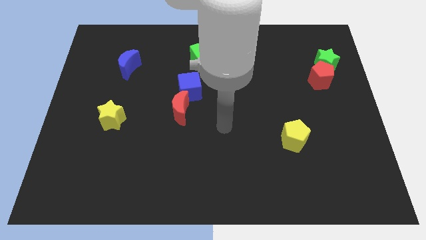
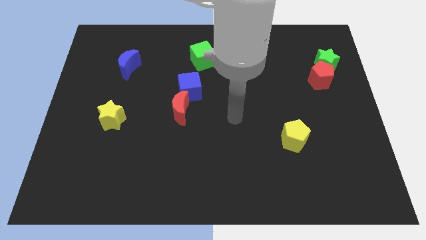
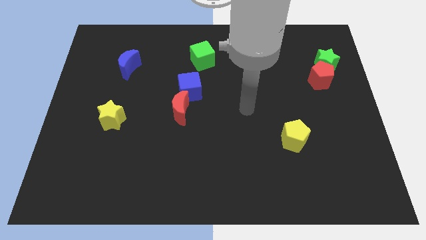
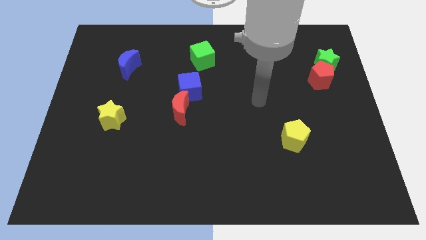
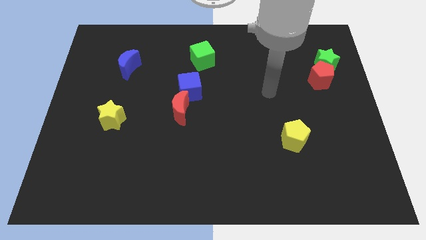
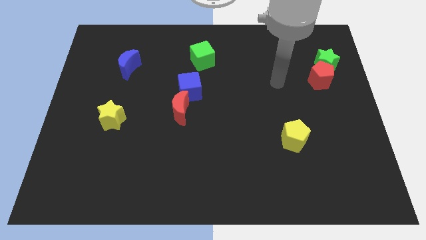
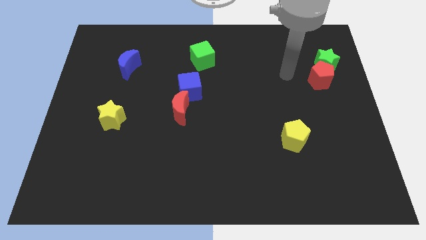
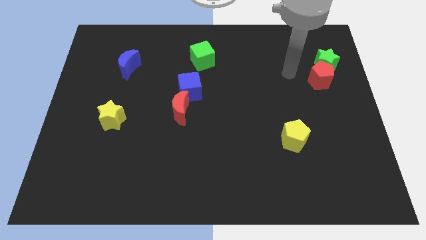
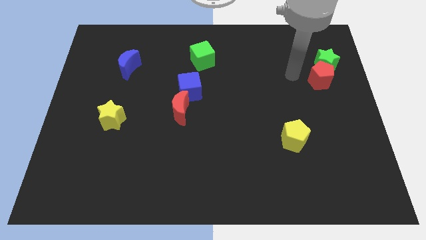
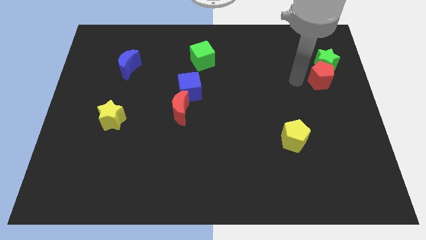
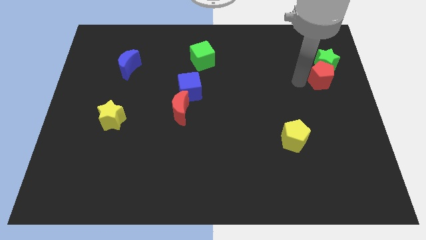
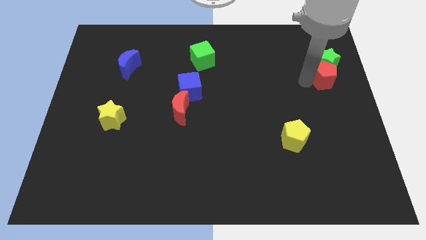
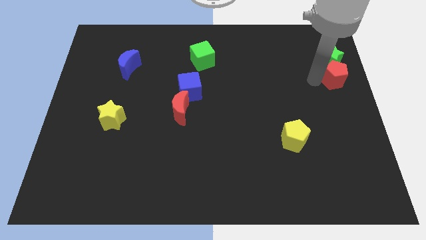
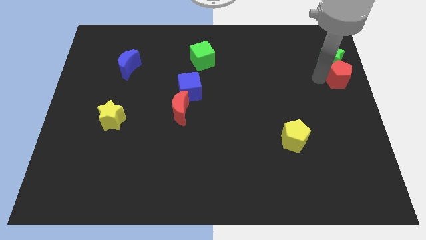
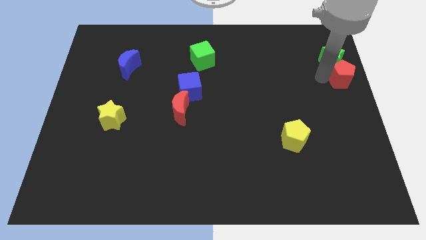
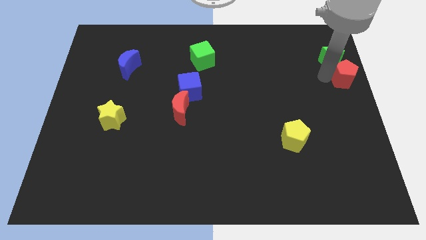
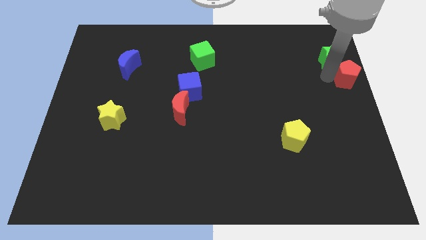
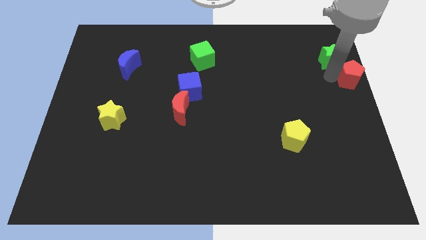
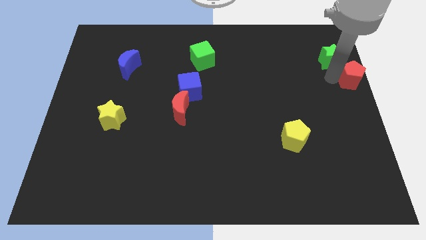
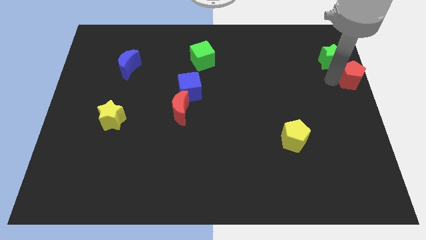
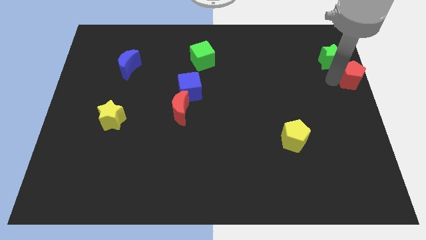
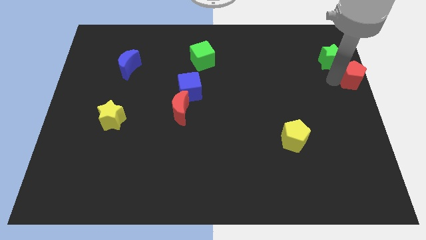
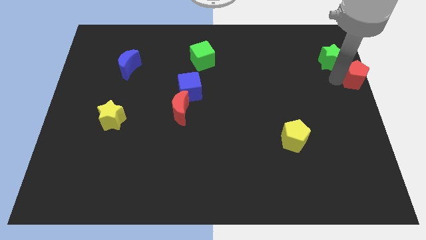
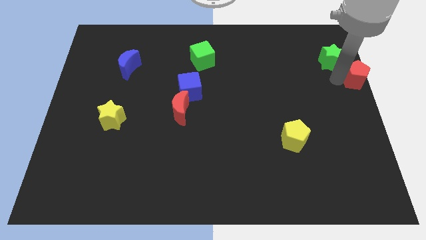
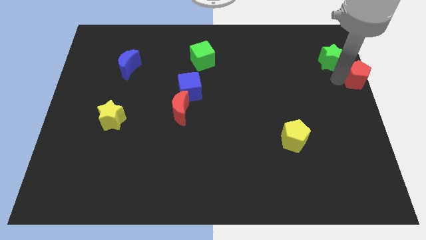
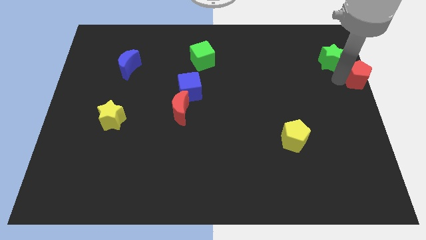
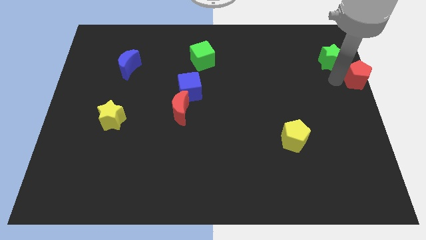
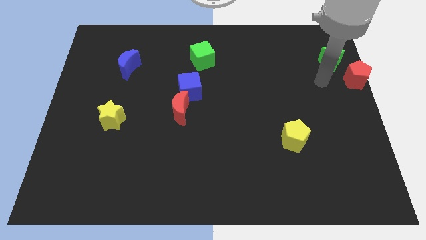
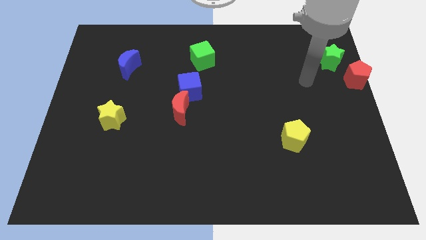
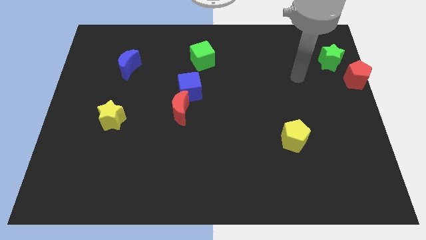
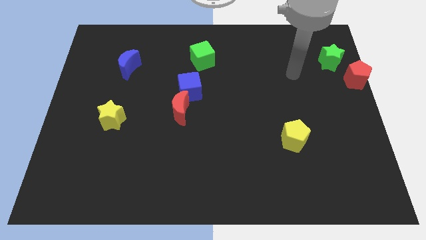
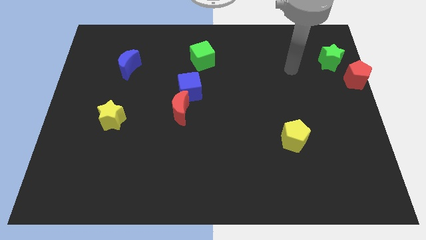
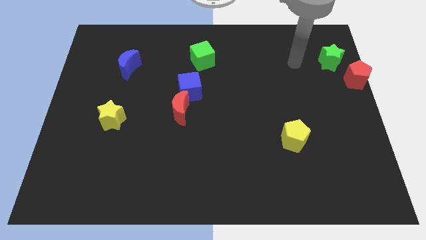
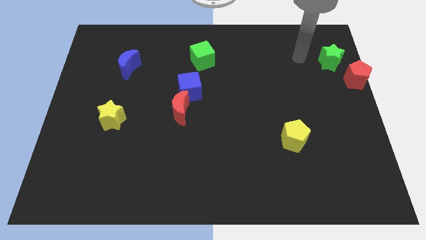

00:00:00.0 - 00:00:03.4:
separate the red pentagon from the green star

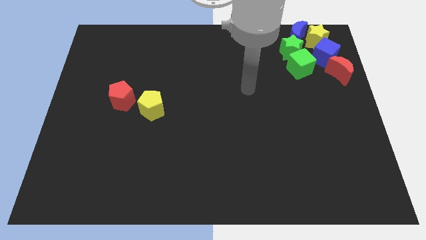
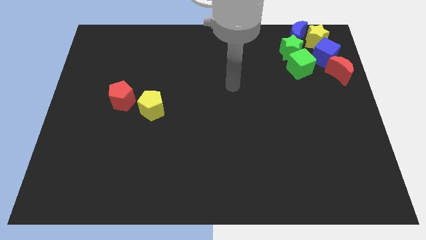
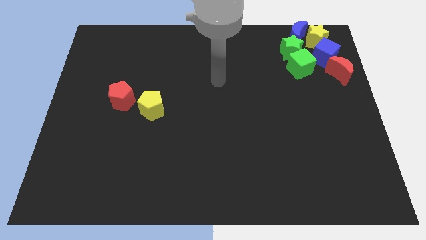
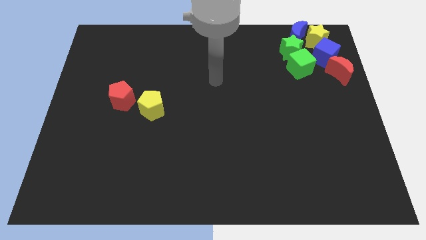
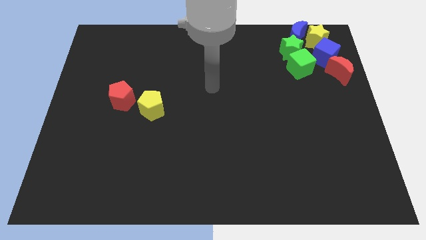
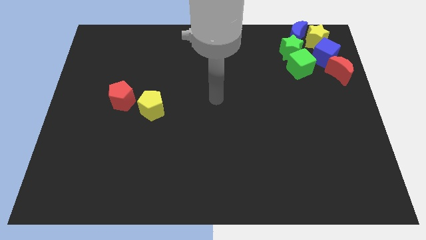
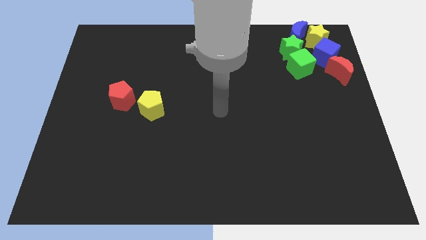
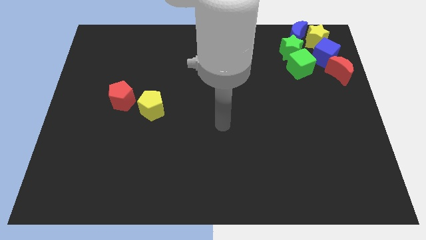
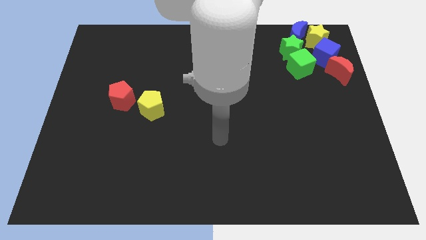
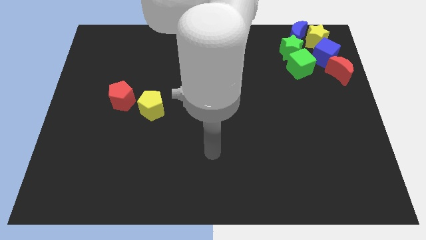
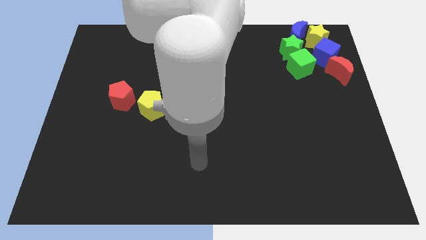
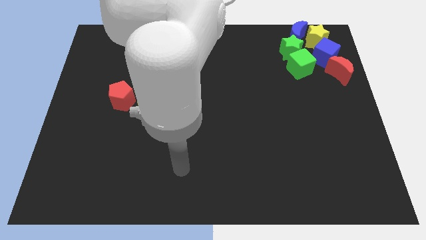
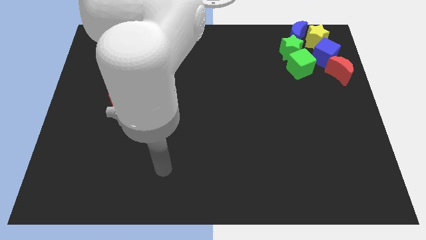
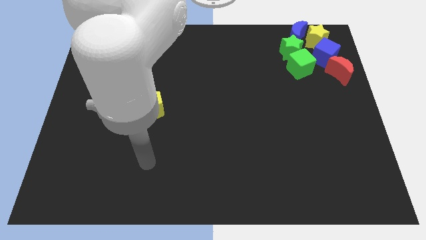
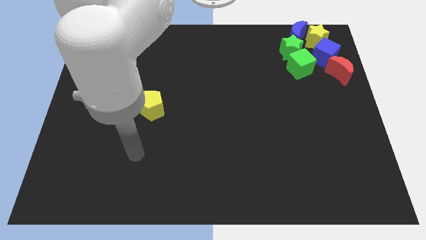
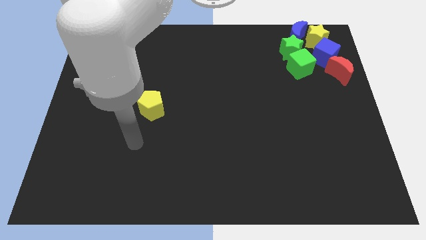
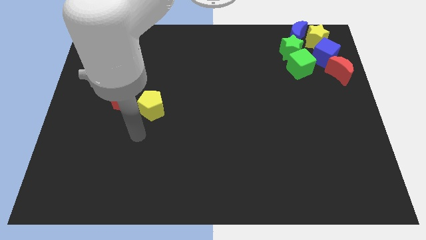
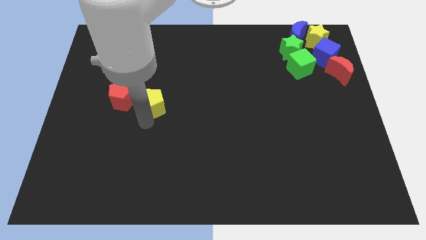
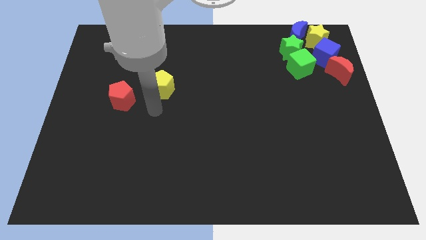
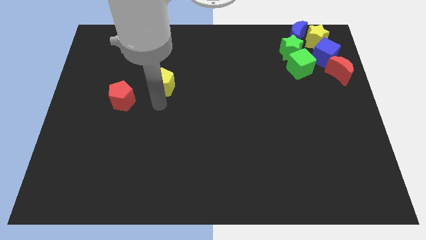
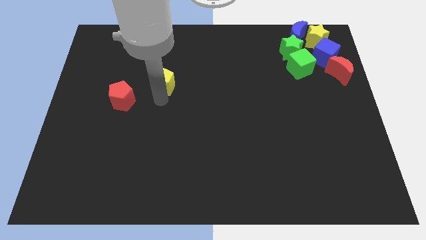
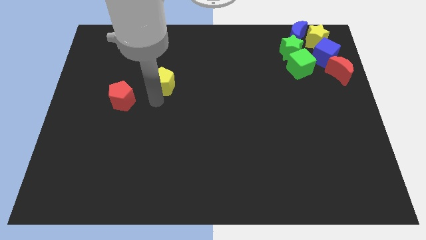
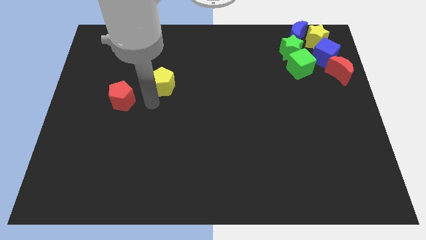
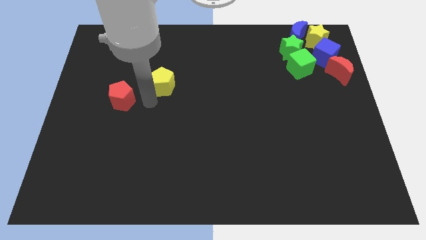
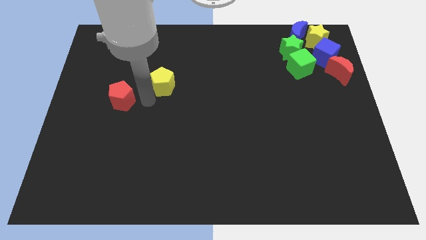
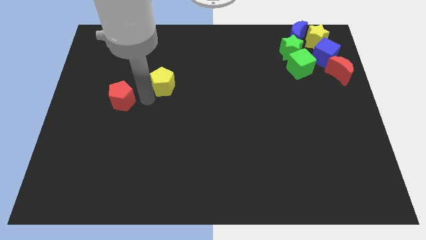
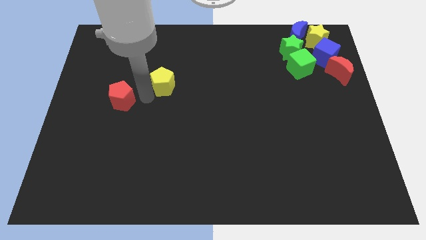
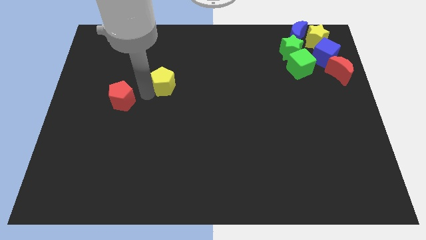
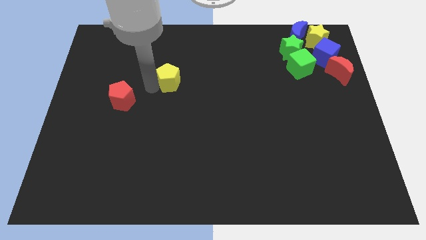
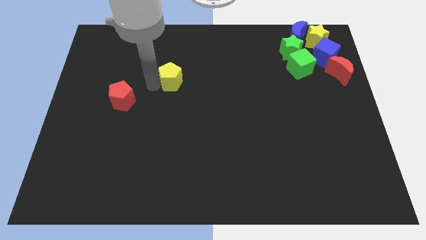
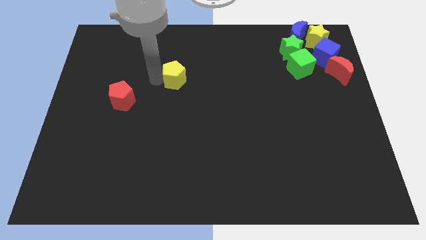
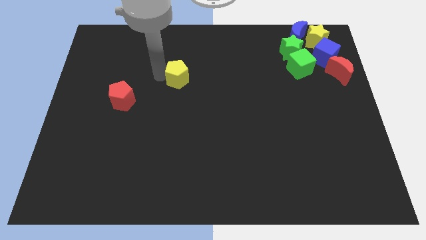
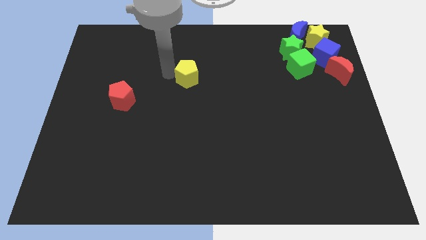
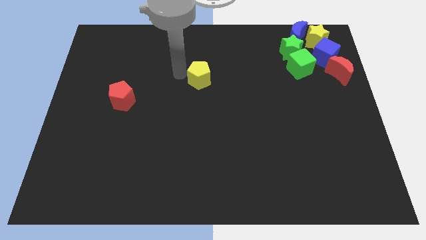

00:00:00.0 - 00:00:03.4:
drag the yellow pentagon in the upward direction

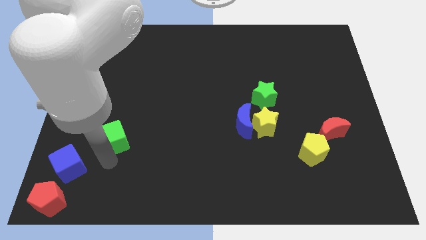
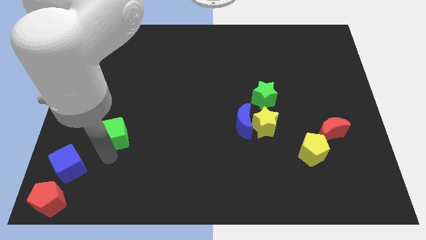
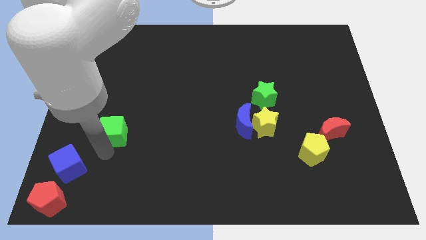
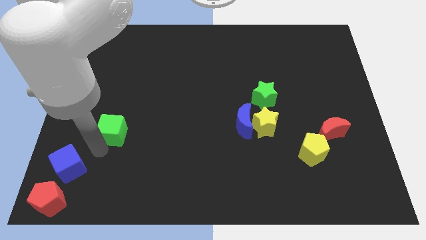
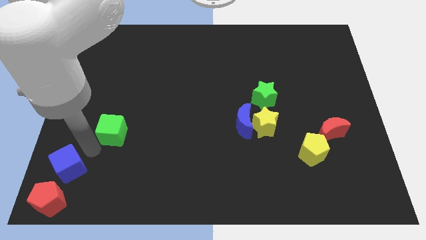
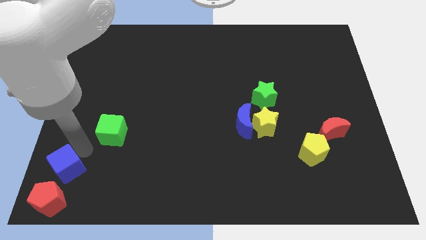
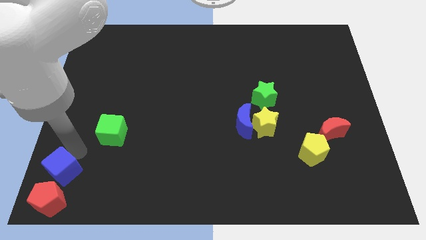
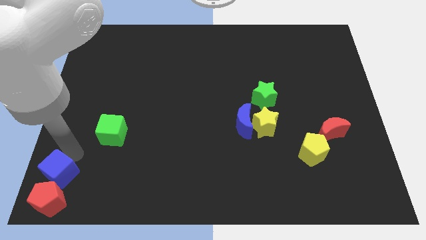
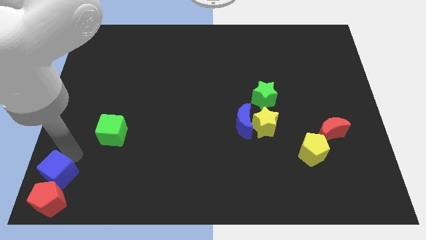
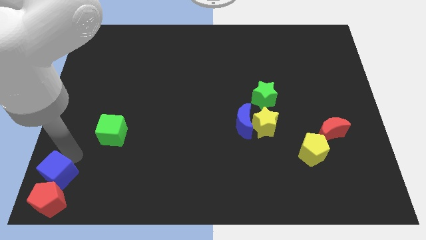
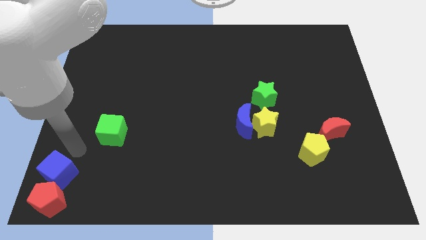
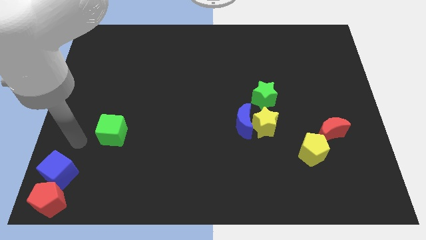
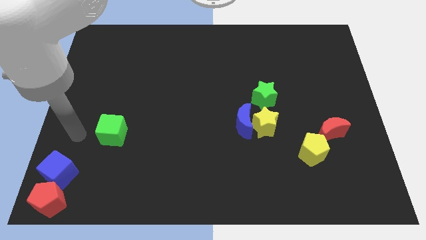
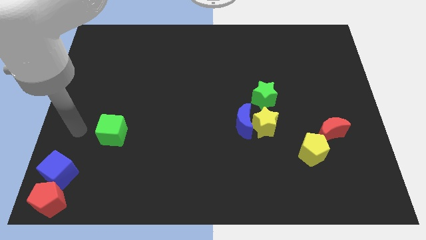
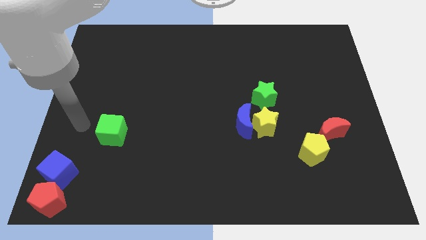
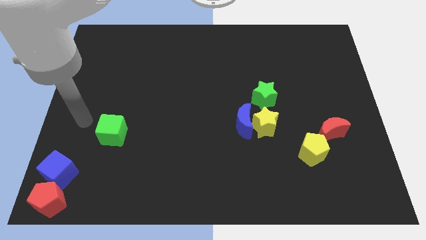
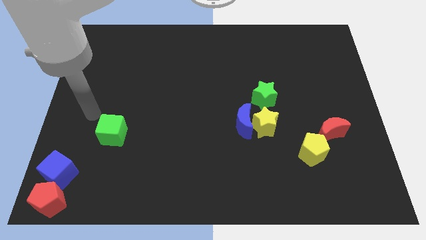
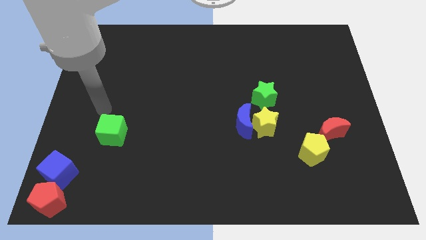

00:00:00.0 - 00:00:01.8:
separate the green cube and blue cube

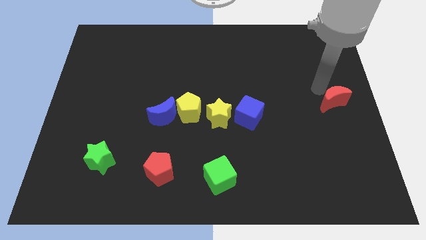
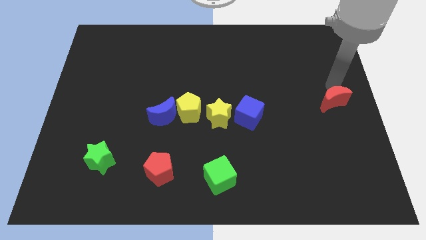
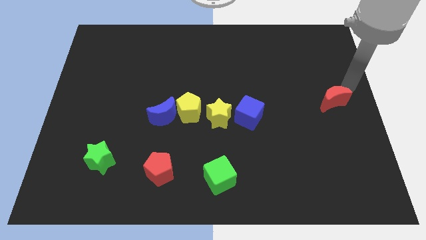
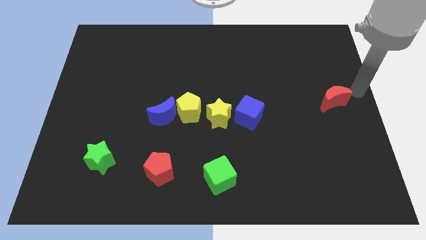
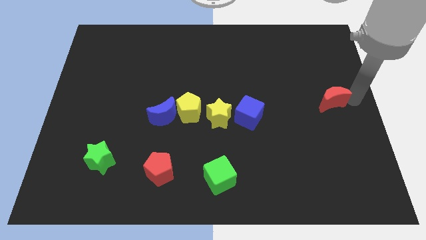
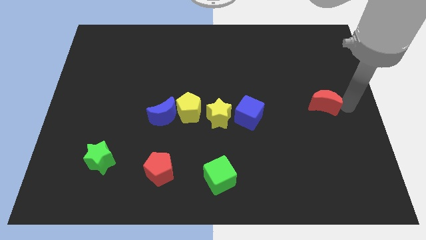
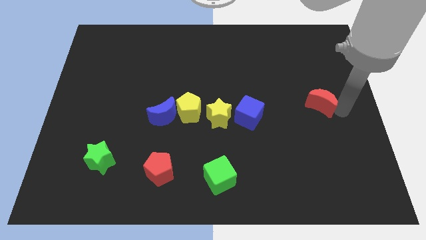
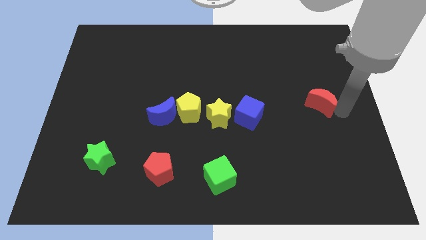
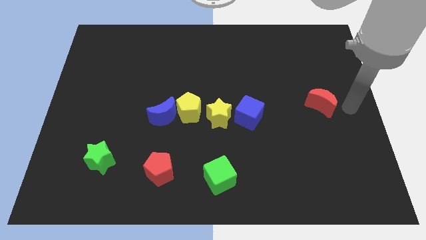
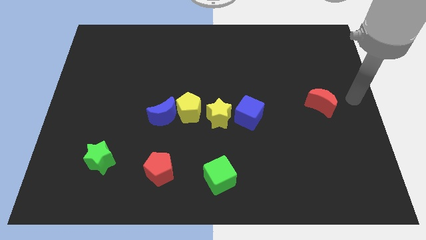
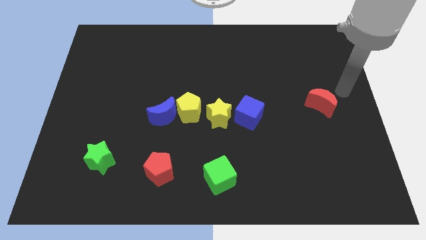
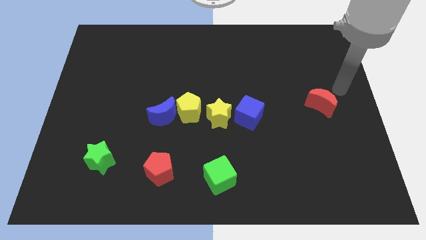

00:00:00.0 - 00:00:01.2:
slightly move the red crescent to the left of the board
